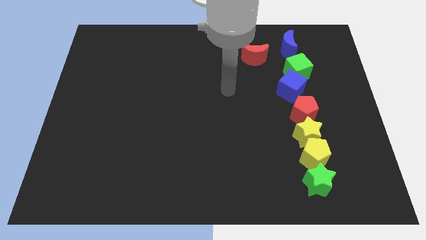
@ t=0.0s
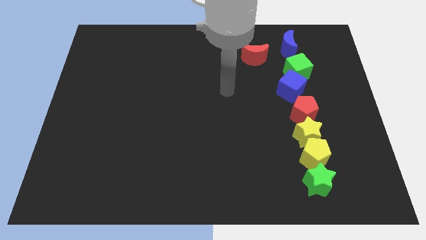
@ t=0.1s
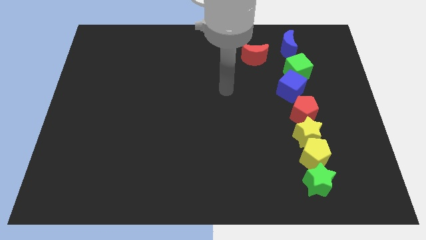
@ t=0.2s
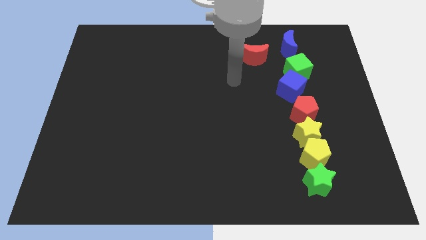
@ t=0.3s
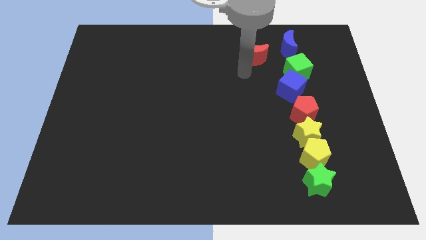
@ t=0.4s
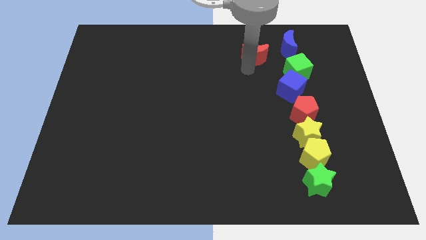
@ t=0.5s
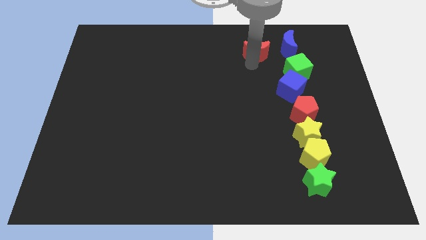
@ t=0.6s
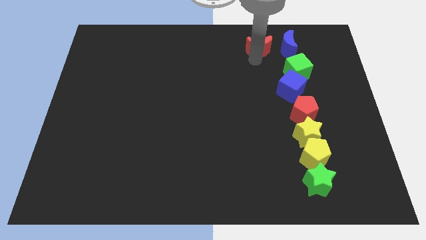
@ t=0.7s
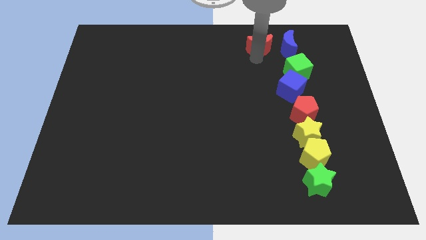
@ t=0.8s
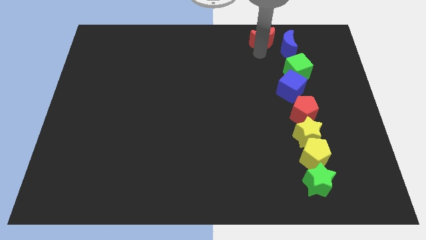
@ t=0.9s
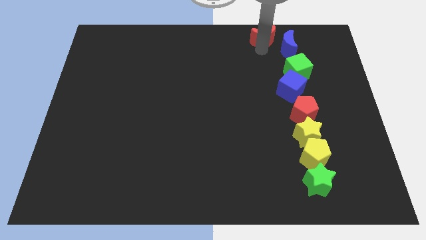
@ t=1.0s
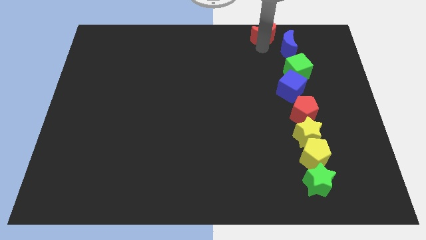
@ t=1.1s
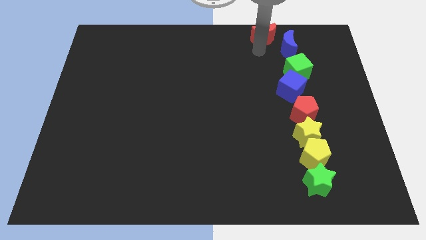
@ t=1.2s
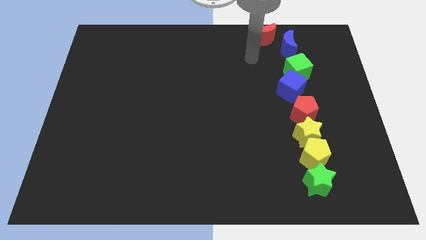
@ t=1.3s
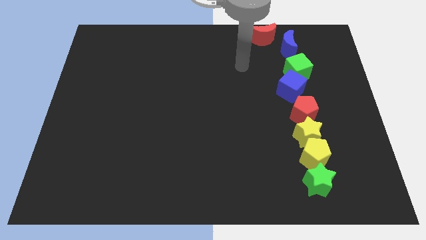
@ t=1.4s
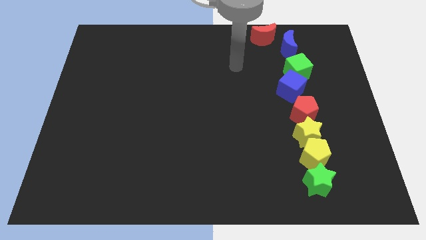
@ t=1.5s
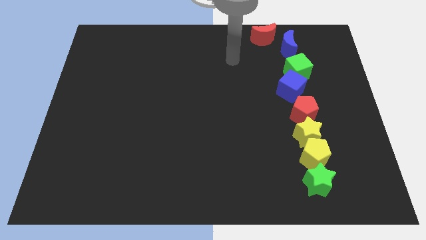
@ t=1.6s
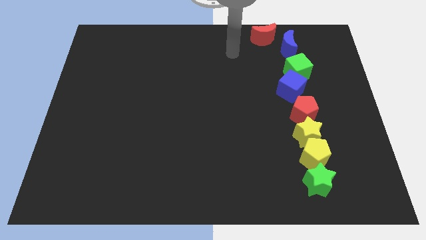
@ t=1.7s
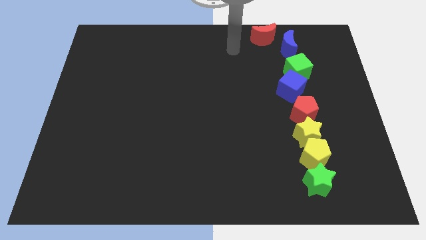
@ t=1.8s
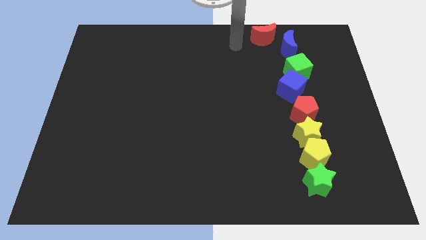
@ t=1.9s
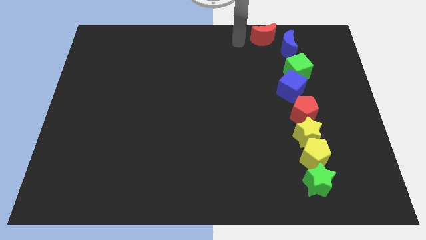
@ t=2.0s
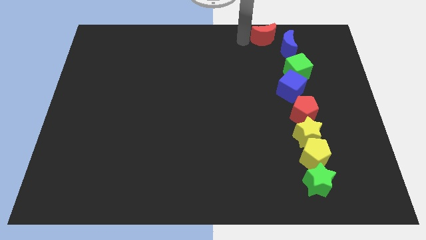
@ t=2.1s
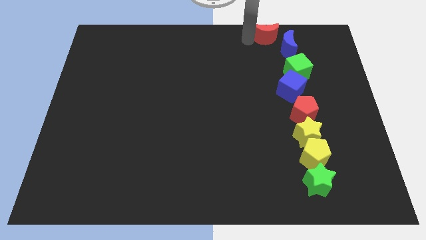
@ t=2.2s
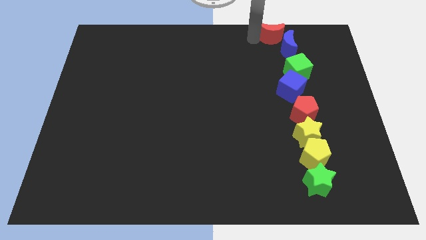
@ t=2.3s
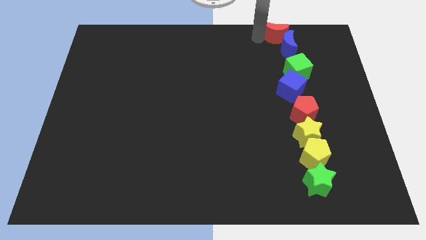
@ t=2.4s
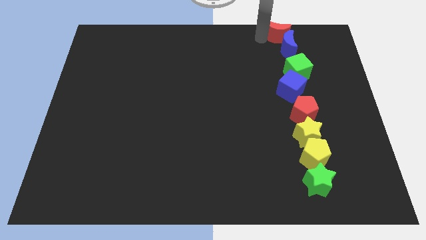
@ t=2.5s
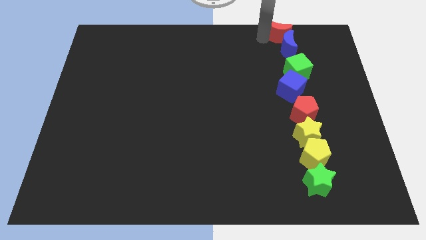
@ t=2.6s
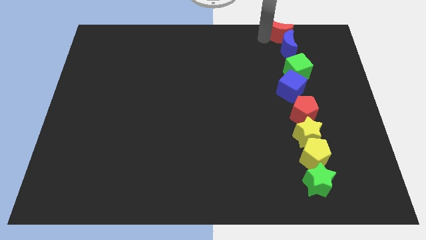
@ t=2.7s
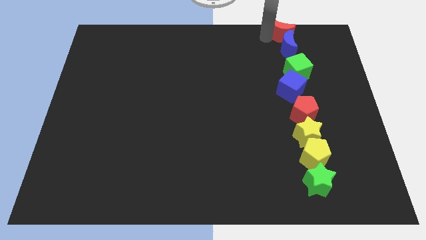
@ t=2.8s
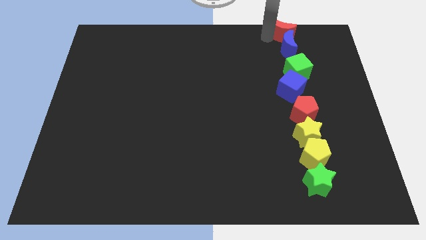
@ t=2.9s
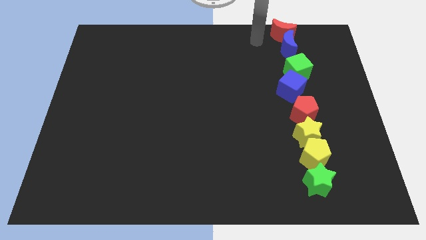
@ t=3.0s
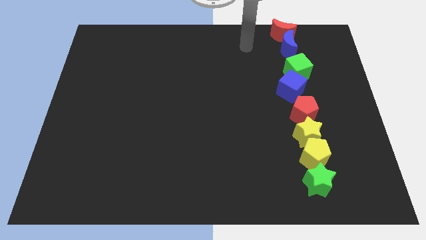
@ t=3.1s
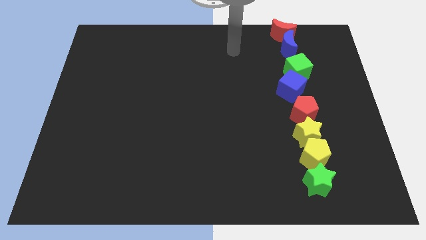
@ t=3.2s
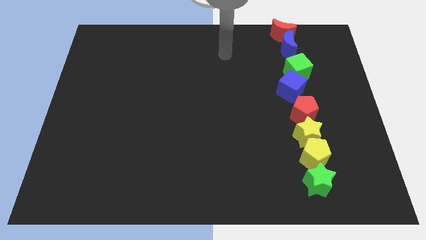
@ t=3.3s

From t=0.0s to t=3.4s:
place the red crescent vertically above the blue crescent

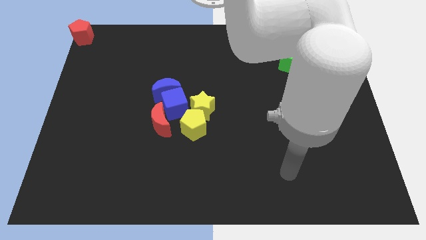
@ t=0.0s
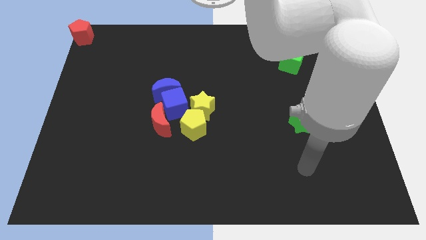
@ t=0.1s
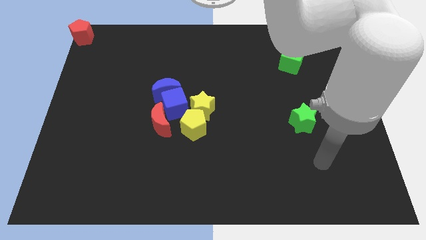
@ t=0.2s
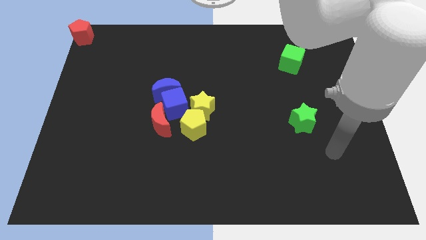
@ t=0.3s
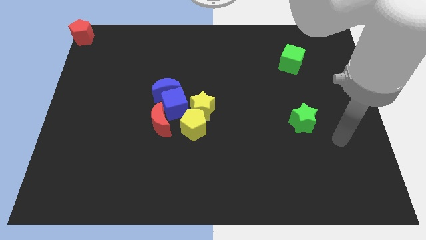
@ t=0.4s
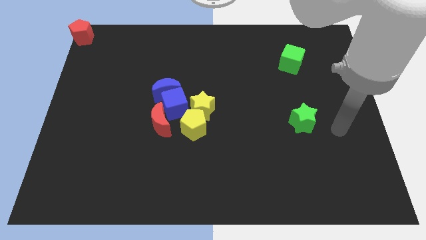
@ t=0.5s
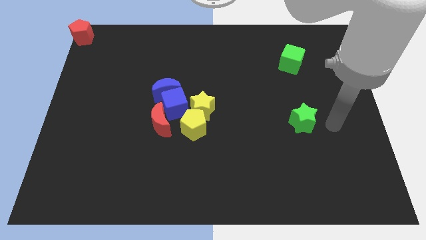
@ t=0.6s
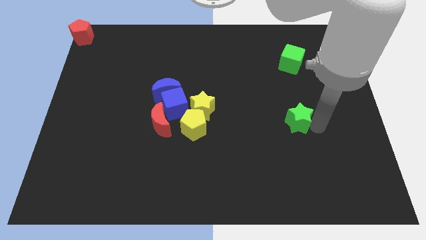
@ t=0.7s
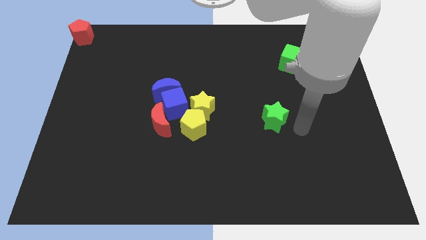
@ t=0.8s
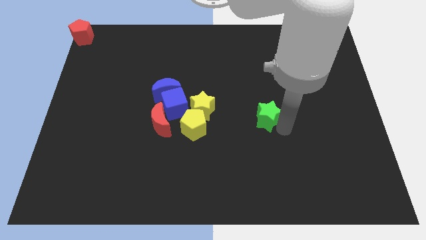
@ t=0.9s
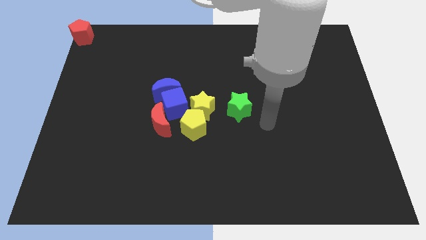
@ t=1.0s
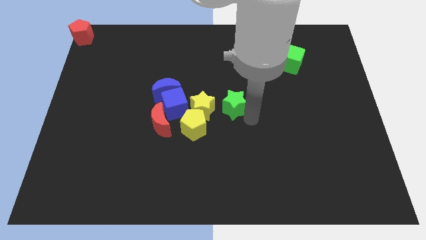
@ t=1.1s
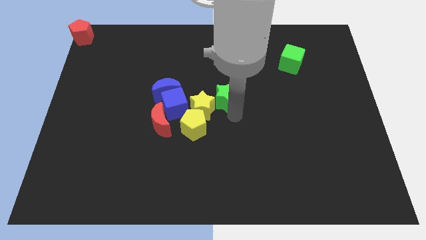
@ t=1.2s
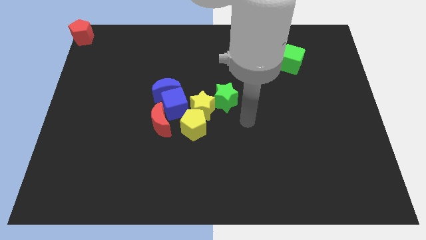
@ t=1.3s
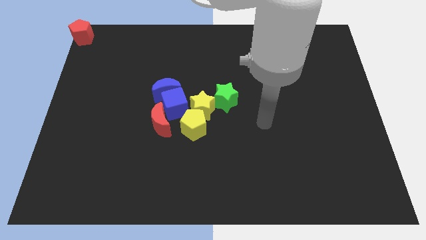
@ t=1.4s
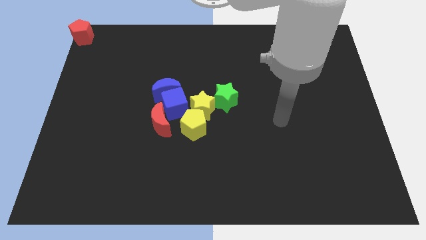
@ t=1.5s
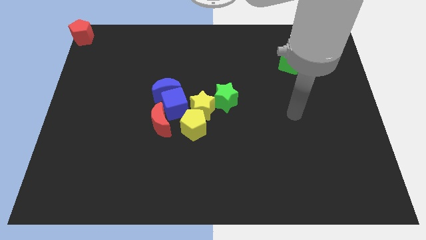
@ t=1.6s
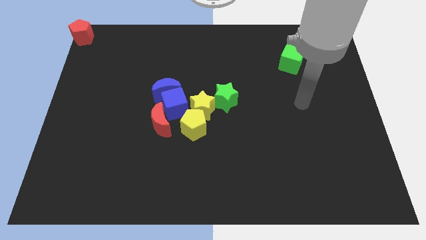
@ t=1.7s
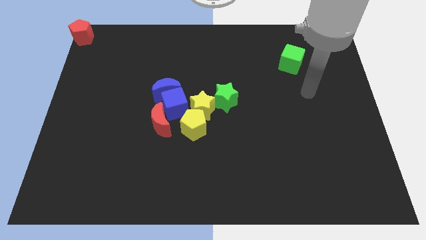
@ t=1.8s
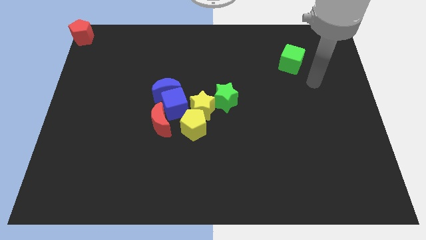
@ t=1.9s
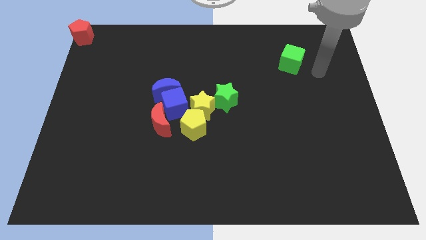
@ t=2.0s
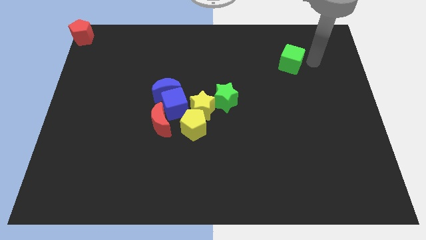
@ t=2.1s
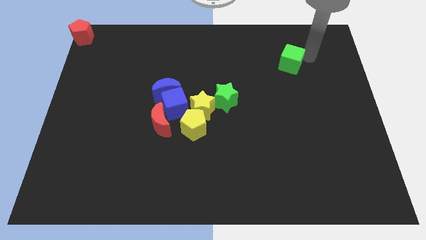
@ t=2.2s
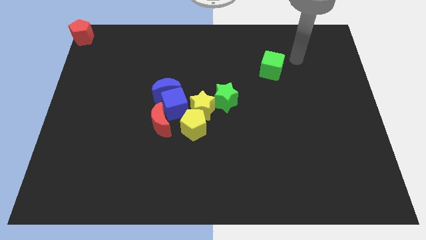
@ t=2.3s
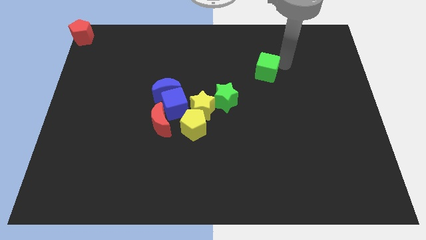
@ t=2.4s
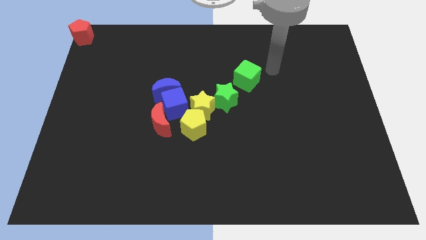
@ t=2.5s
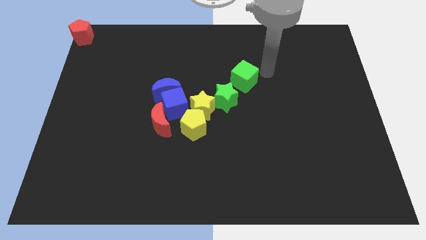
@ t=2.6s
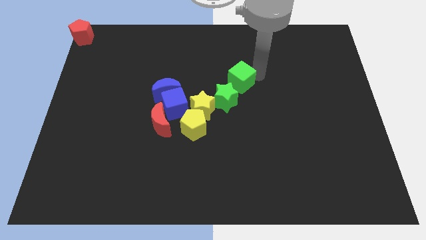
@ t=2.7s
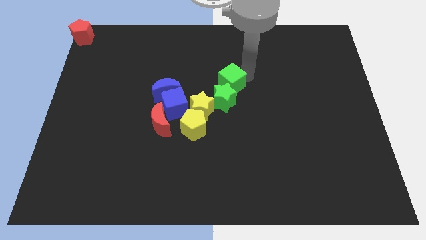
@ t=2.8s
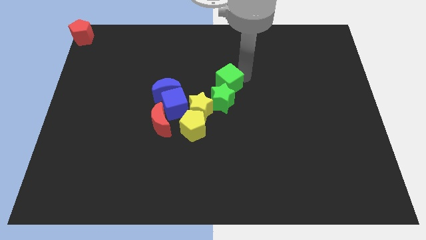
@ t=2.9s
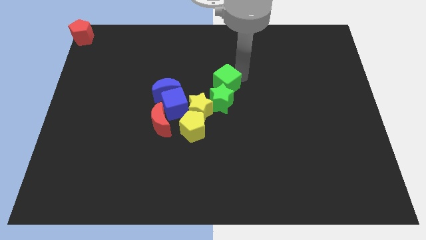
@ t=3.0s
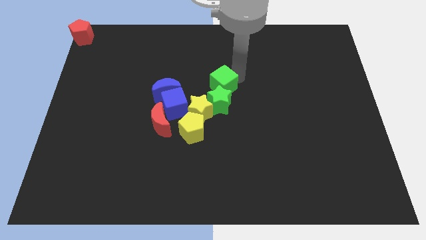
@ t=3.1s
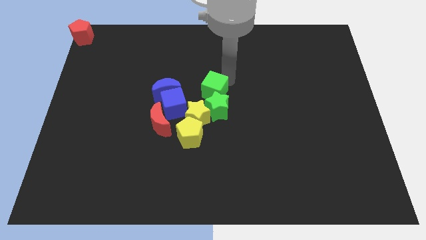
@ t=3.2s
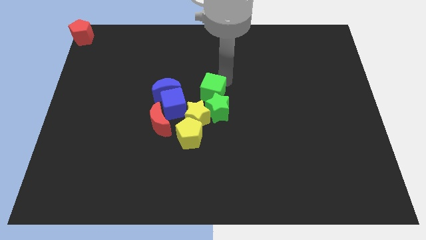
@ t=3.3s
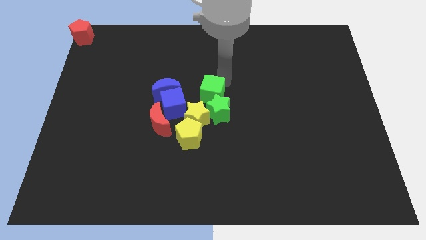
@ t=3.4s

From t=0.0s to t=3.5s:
push the green star and green cube towards the center of the board

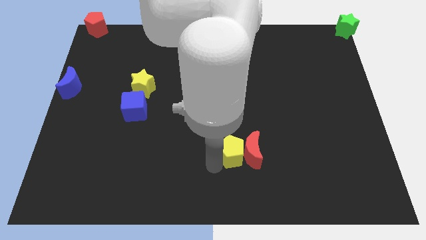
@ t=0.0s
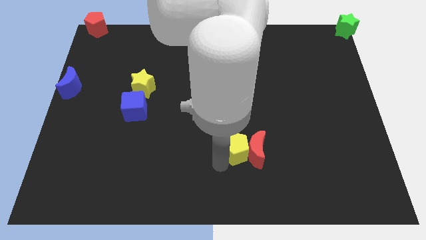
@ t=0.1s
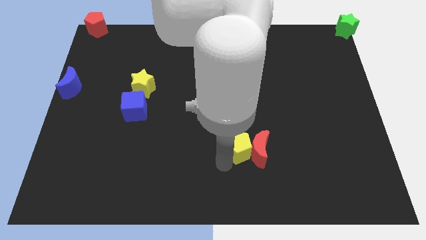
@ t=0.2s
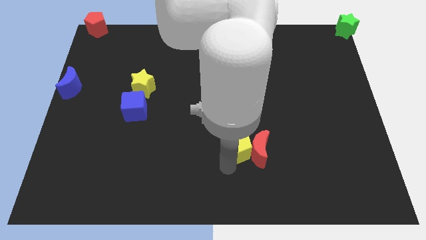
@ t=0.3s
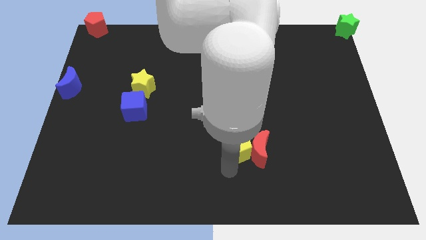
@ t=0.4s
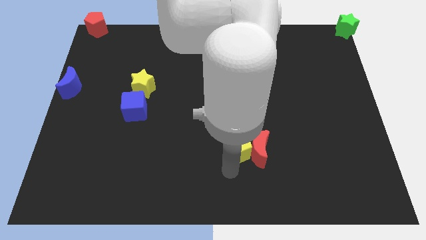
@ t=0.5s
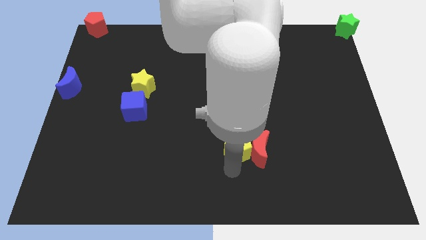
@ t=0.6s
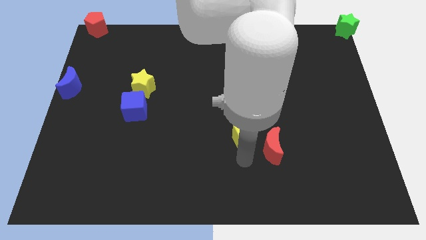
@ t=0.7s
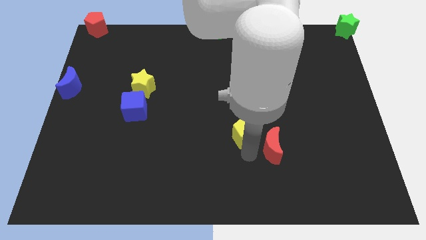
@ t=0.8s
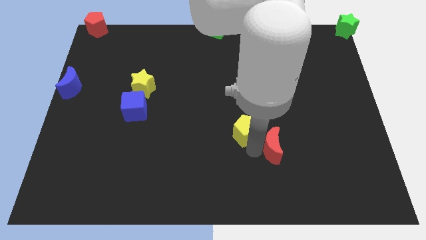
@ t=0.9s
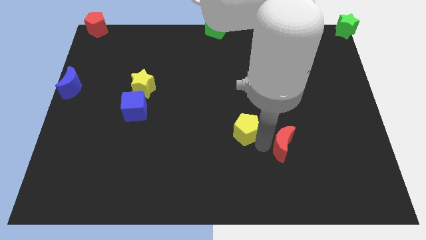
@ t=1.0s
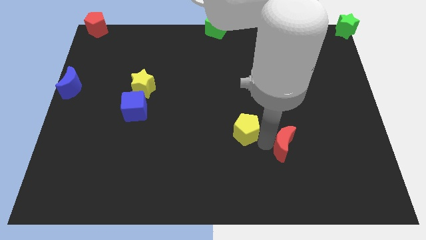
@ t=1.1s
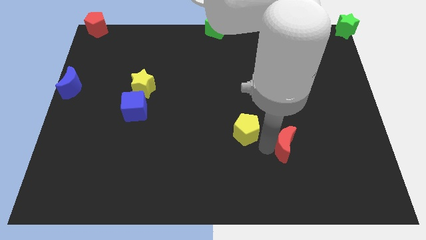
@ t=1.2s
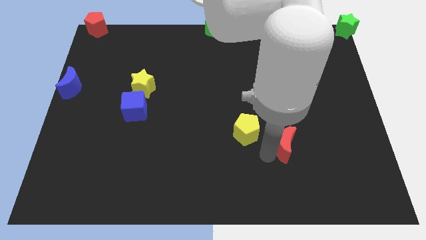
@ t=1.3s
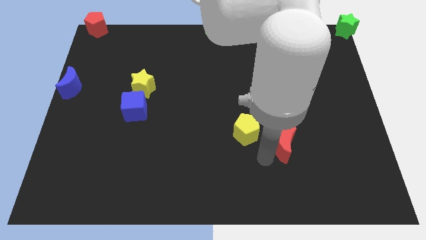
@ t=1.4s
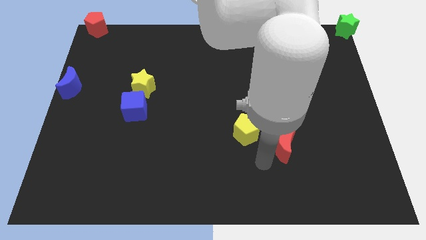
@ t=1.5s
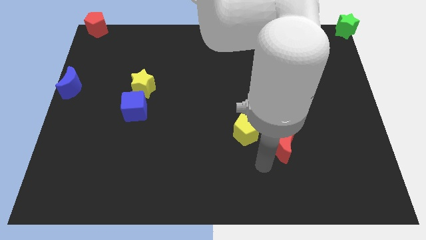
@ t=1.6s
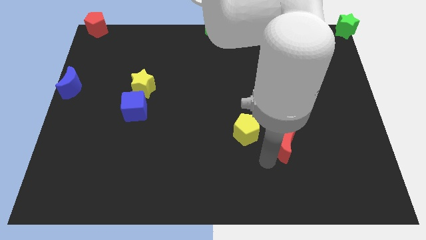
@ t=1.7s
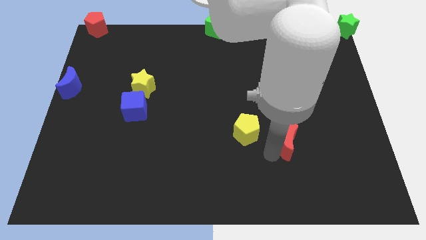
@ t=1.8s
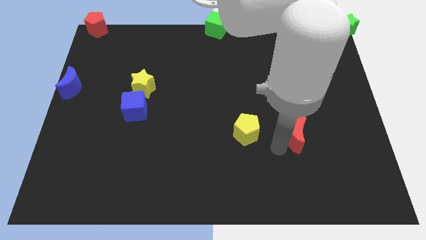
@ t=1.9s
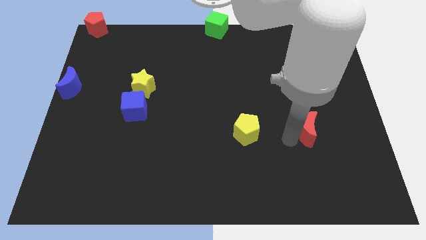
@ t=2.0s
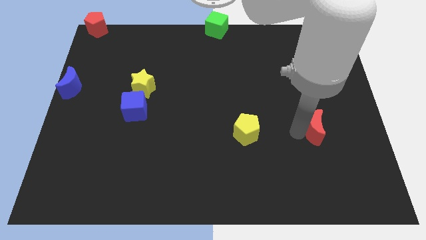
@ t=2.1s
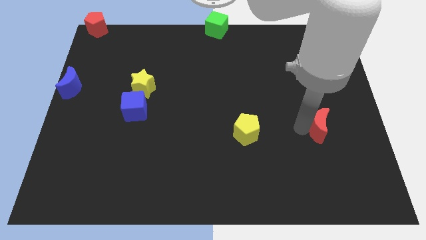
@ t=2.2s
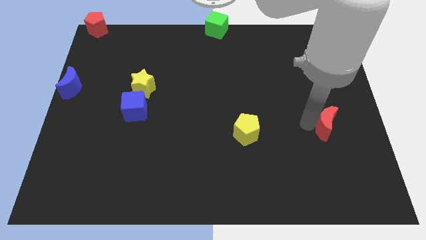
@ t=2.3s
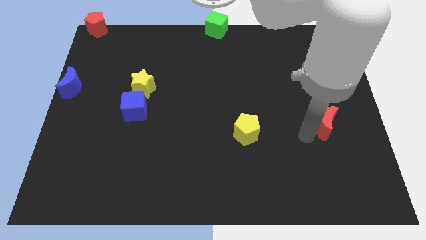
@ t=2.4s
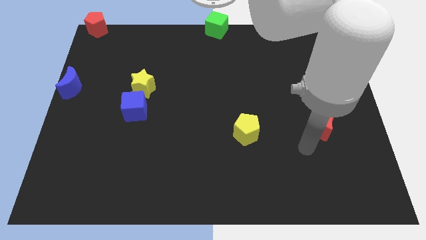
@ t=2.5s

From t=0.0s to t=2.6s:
separate the yellow pentagon and red moon
